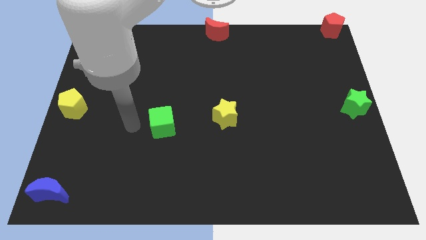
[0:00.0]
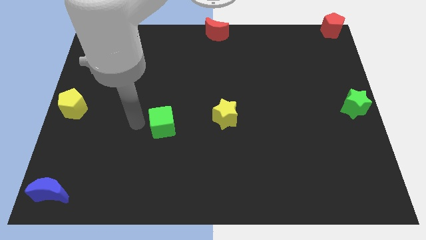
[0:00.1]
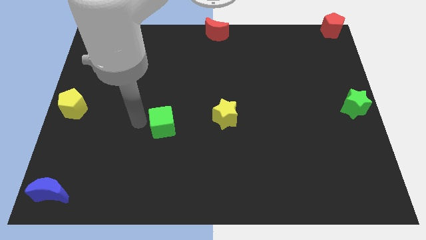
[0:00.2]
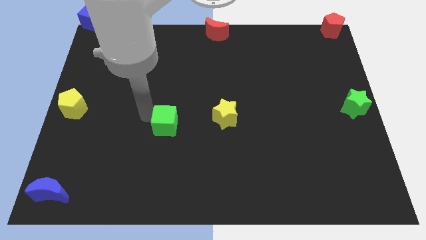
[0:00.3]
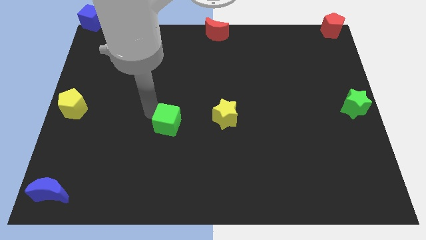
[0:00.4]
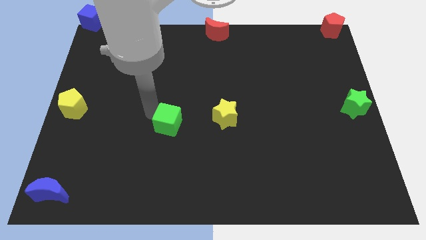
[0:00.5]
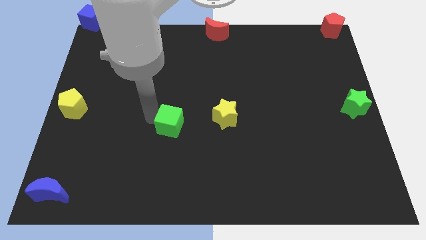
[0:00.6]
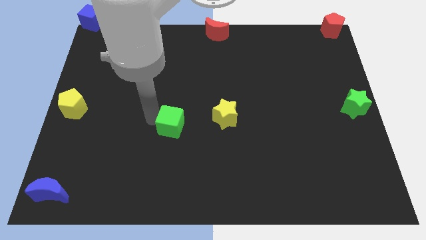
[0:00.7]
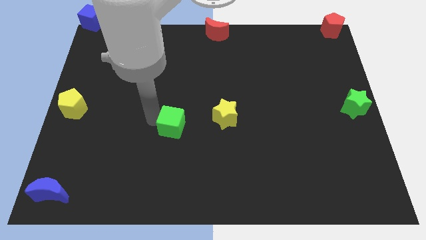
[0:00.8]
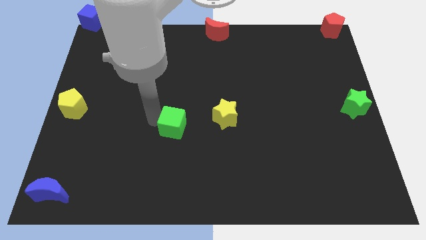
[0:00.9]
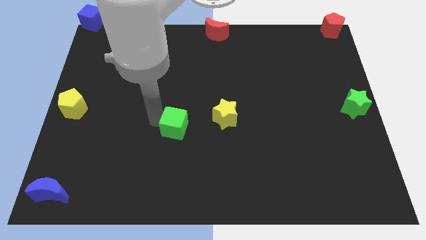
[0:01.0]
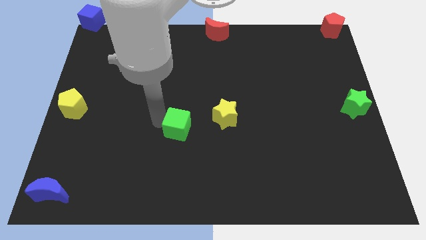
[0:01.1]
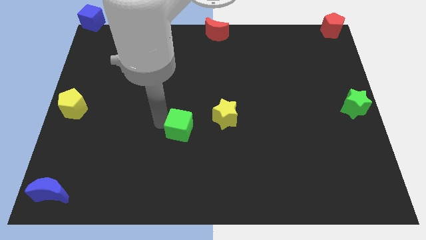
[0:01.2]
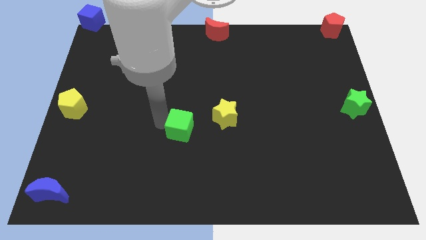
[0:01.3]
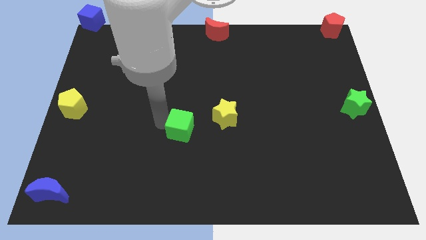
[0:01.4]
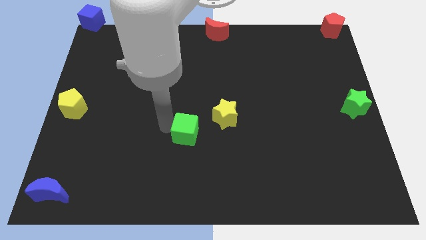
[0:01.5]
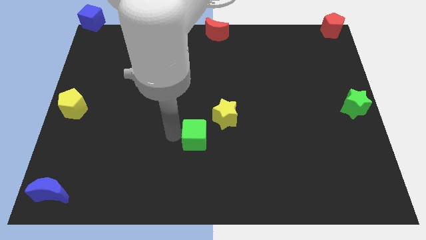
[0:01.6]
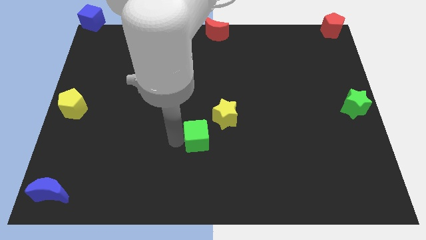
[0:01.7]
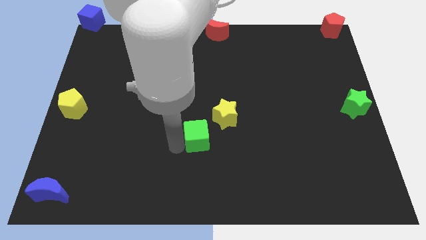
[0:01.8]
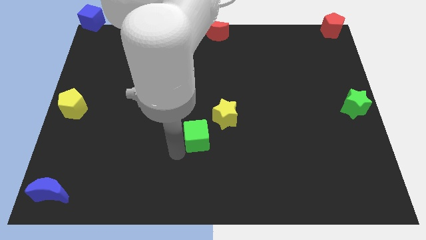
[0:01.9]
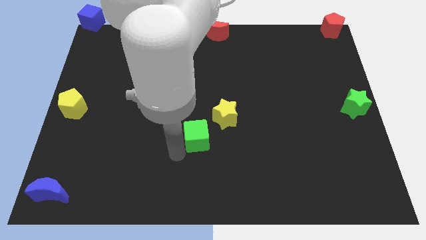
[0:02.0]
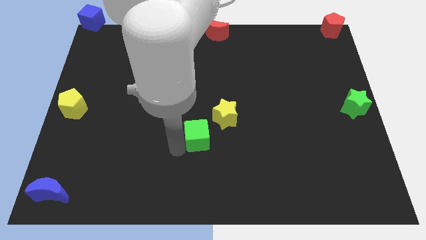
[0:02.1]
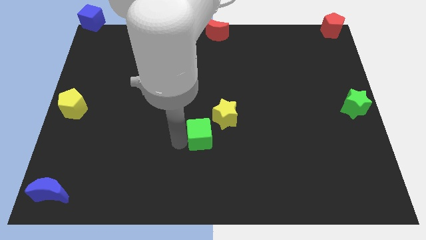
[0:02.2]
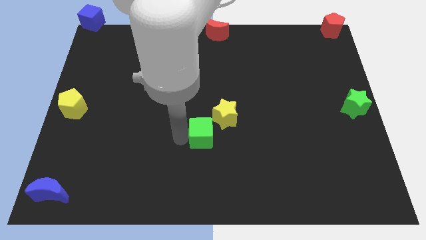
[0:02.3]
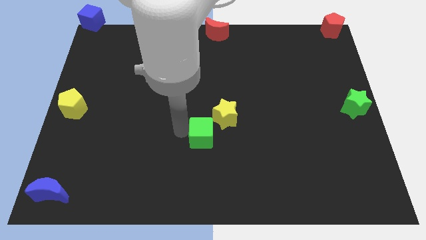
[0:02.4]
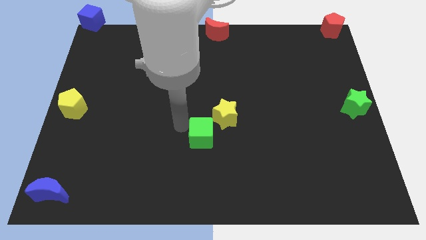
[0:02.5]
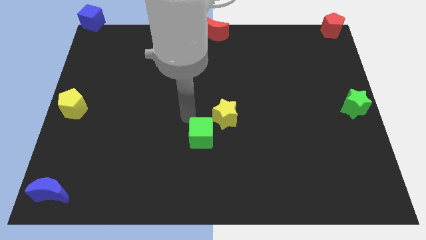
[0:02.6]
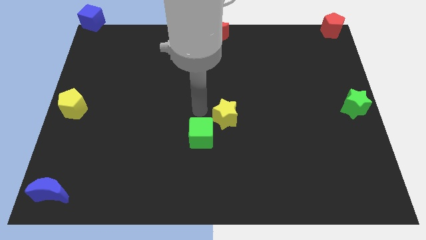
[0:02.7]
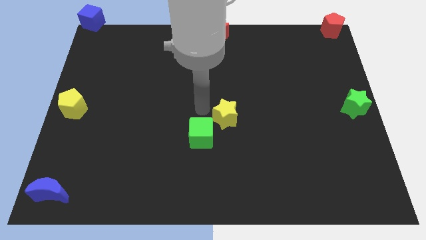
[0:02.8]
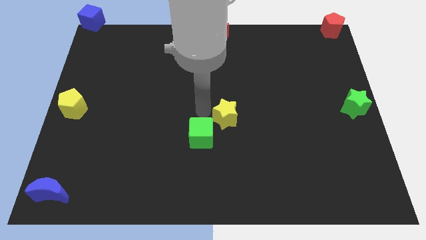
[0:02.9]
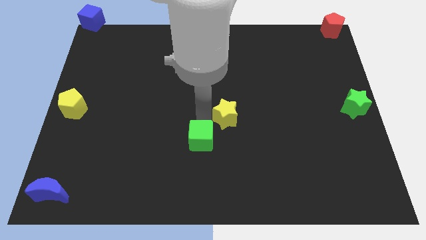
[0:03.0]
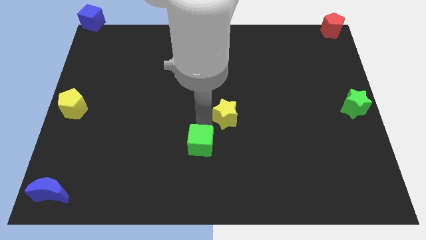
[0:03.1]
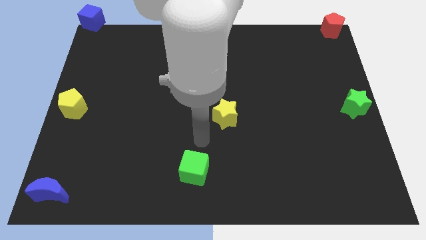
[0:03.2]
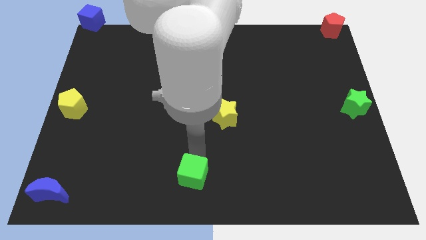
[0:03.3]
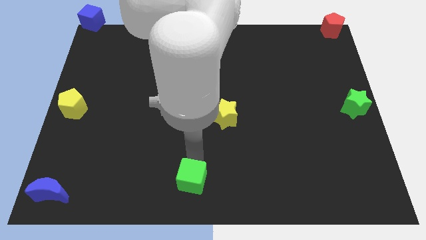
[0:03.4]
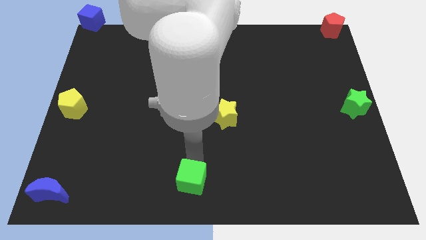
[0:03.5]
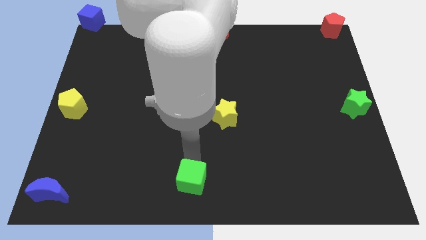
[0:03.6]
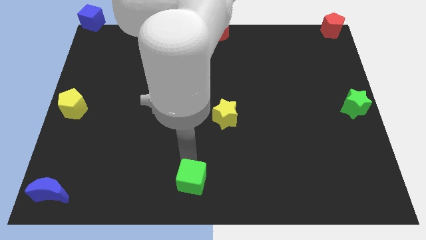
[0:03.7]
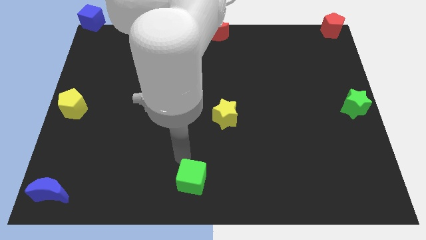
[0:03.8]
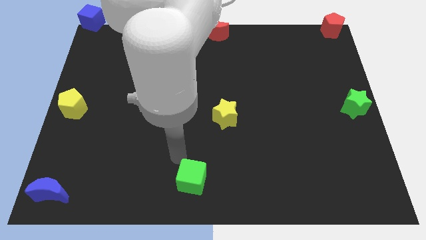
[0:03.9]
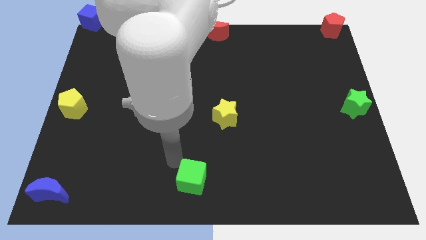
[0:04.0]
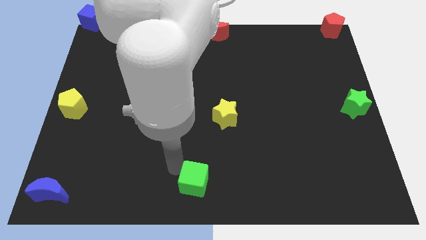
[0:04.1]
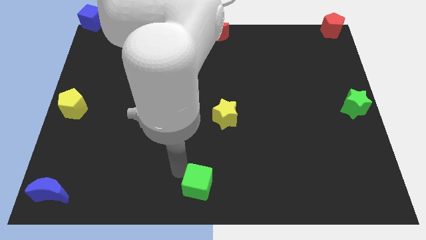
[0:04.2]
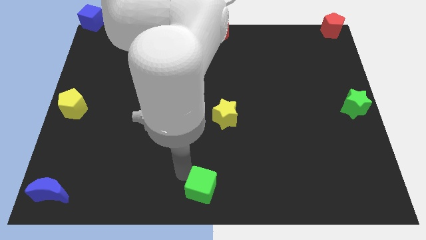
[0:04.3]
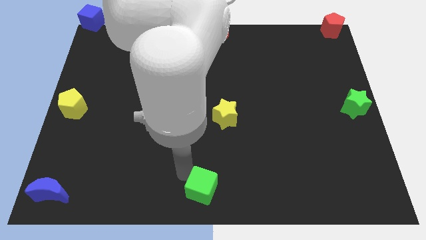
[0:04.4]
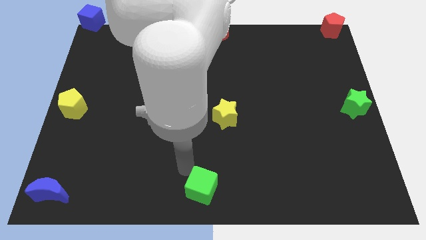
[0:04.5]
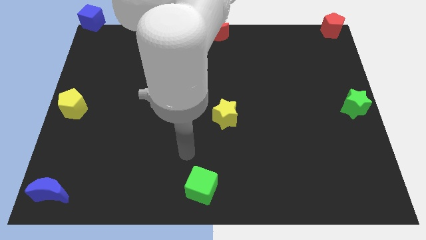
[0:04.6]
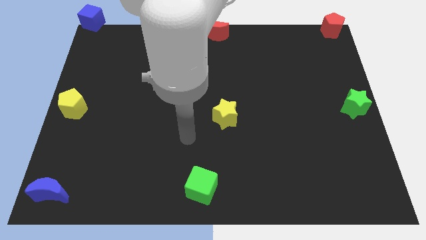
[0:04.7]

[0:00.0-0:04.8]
push the green cube to the bottom center of the board

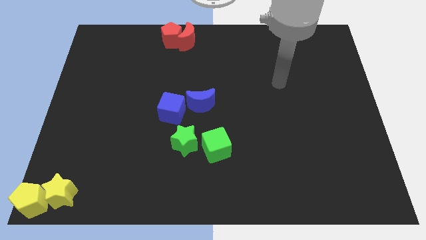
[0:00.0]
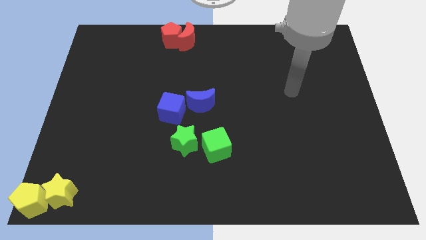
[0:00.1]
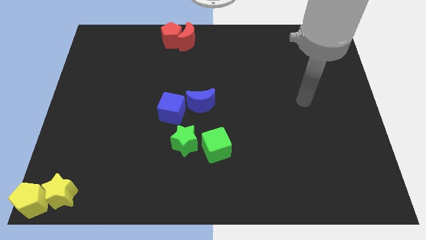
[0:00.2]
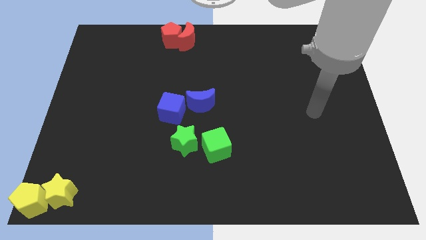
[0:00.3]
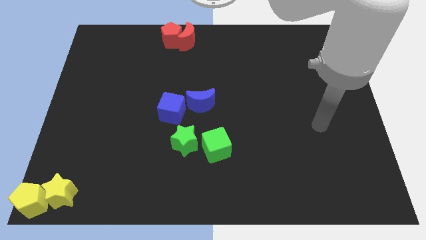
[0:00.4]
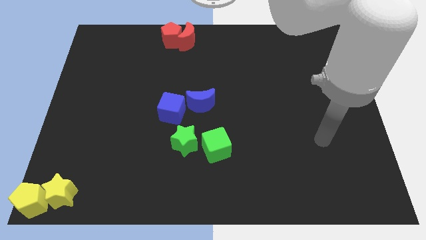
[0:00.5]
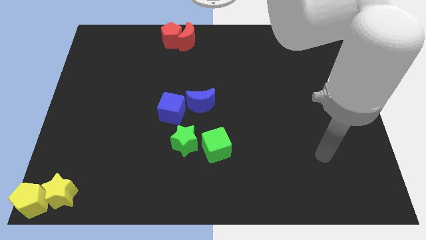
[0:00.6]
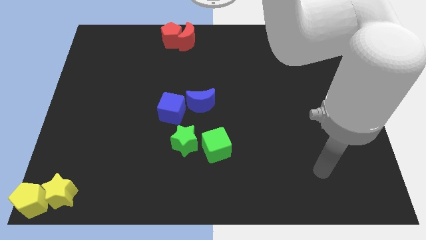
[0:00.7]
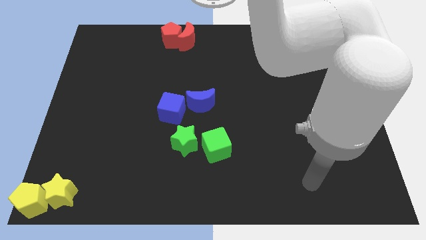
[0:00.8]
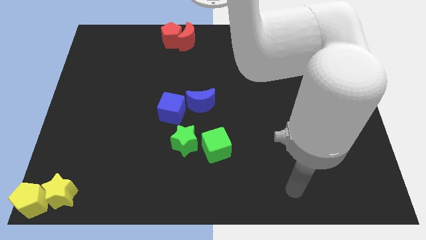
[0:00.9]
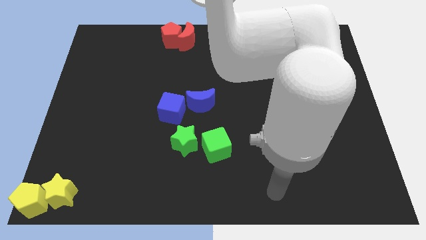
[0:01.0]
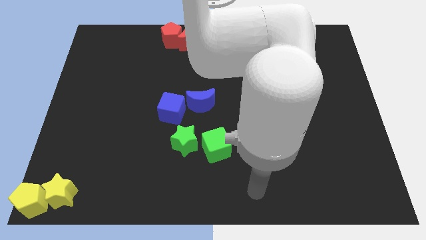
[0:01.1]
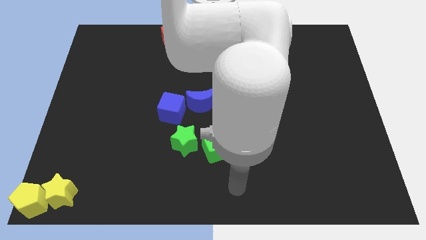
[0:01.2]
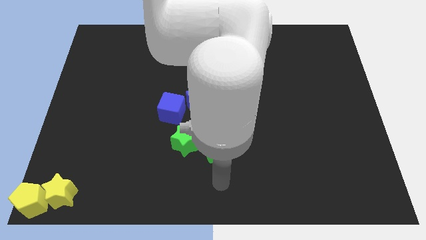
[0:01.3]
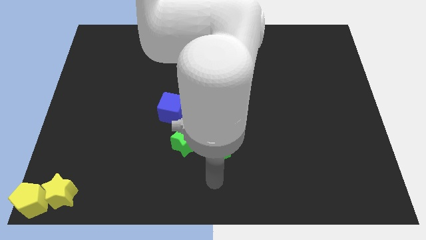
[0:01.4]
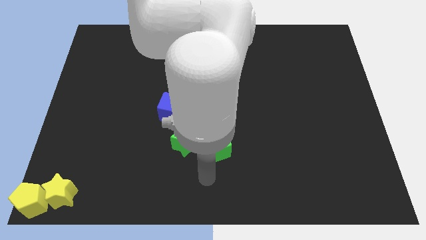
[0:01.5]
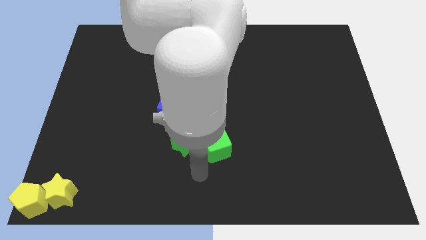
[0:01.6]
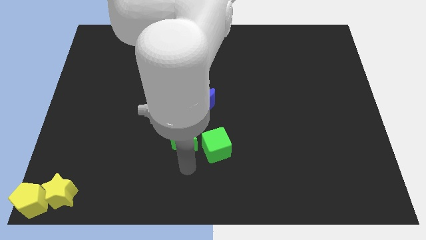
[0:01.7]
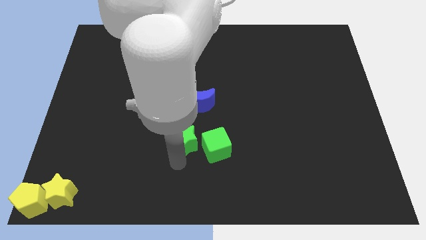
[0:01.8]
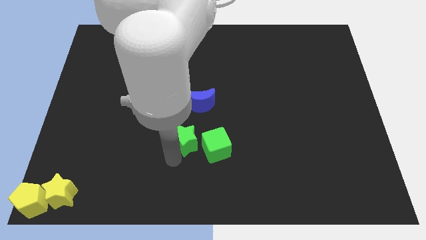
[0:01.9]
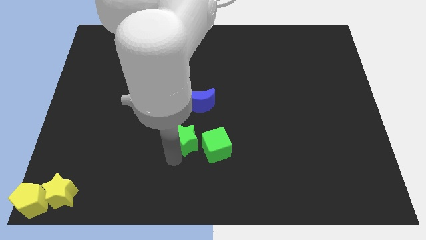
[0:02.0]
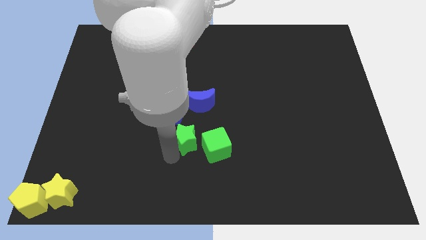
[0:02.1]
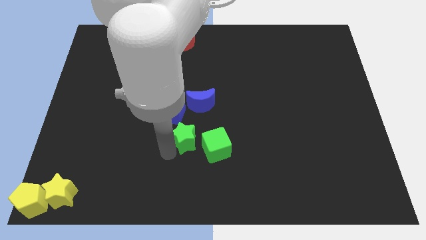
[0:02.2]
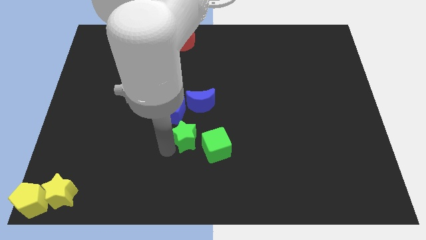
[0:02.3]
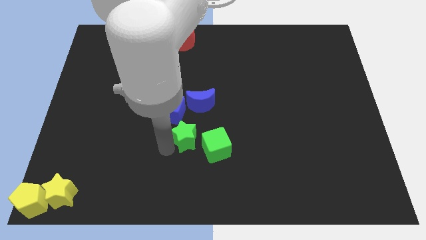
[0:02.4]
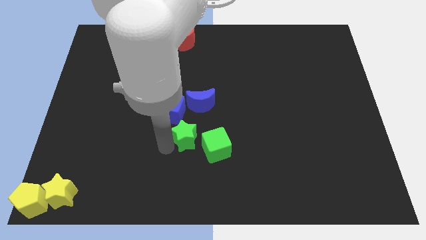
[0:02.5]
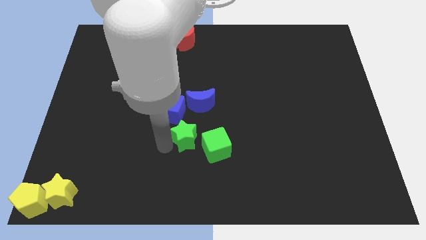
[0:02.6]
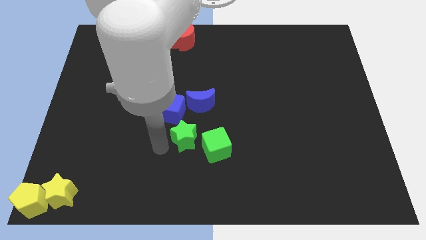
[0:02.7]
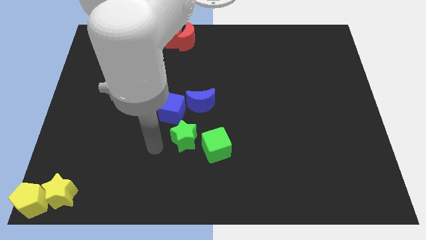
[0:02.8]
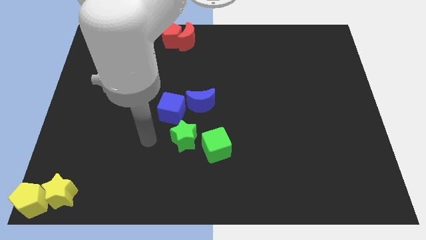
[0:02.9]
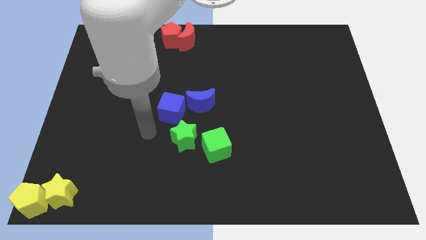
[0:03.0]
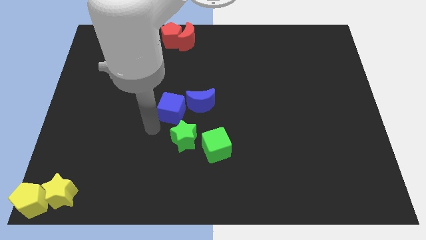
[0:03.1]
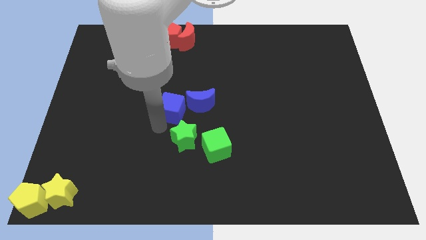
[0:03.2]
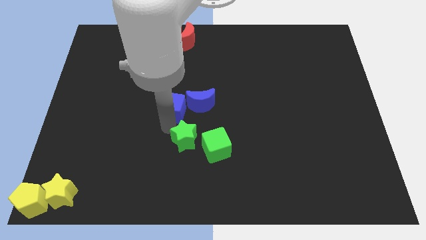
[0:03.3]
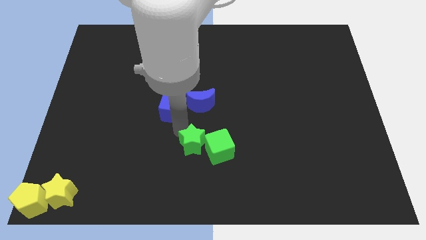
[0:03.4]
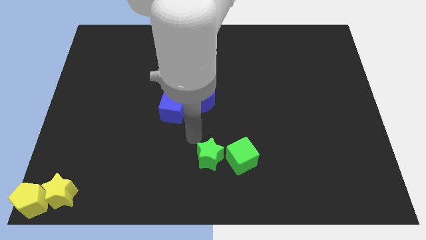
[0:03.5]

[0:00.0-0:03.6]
move your arm and push the green blocks to the bottom

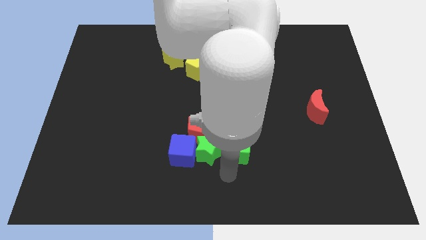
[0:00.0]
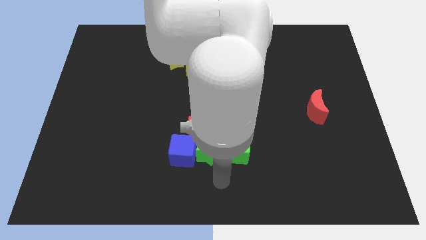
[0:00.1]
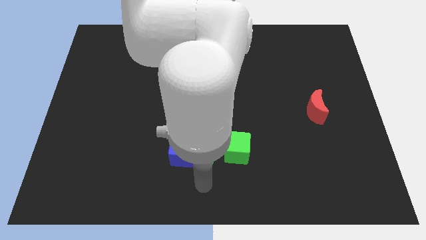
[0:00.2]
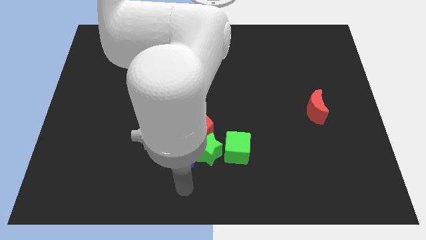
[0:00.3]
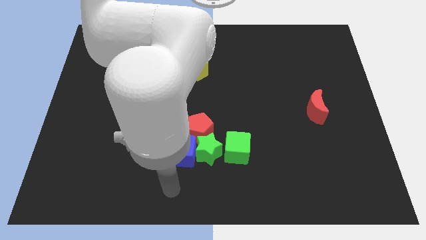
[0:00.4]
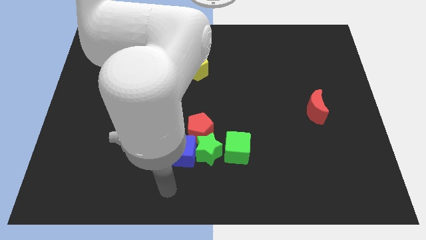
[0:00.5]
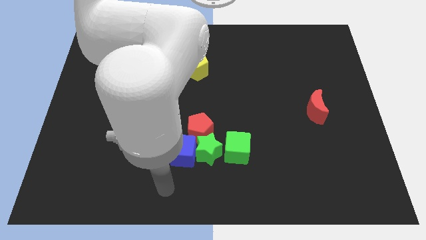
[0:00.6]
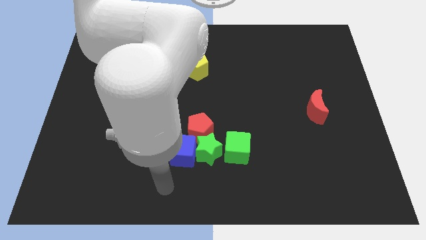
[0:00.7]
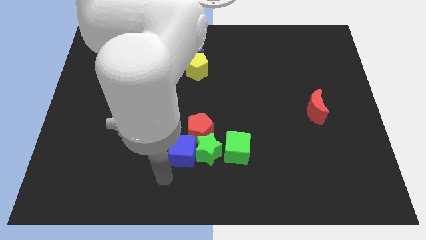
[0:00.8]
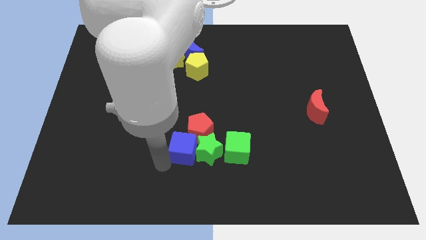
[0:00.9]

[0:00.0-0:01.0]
touch the bottom of blue cube
